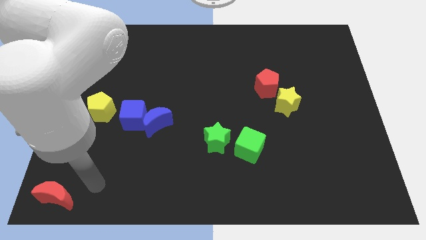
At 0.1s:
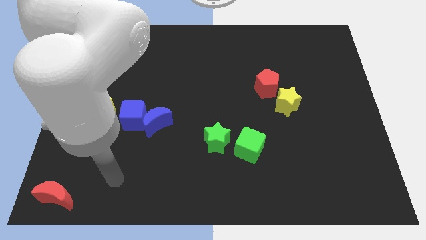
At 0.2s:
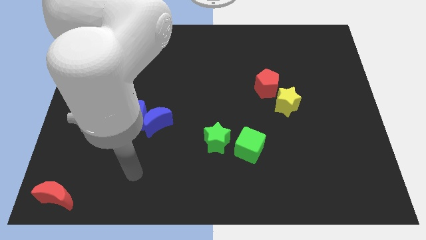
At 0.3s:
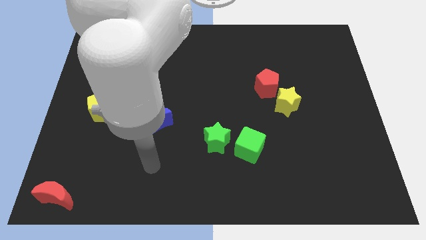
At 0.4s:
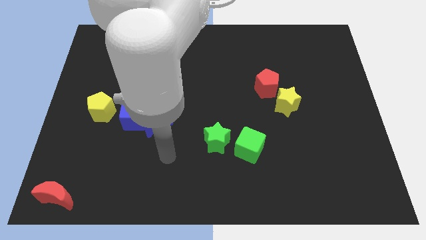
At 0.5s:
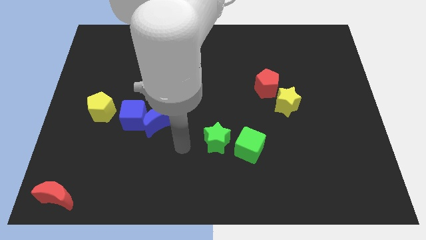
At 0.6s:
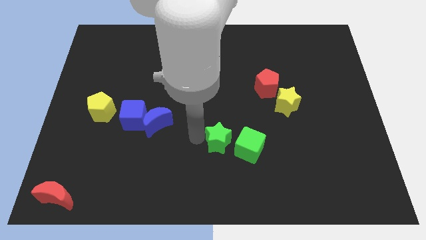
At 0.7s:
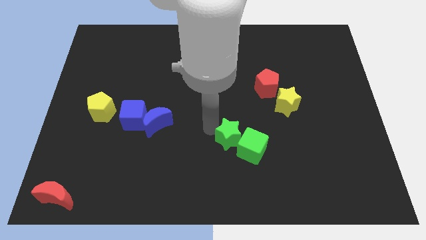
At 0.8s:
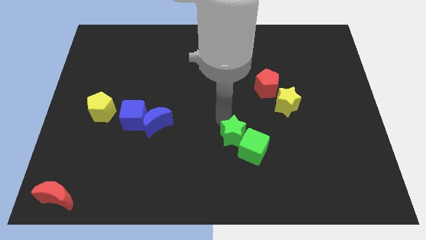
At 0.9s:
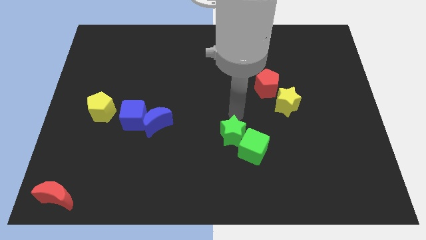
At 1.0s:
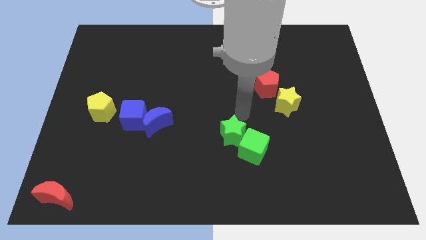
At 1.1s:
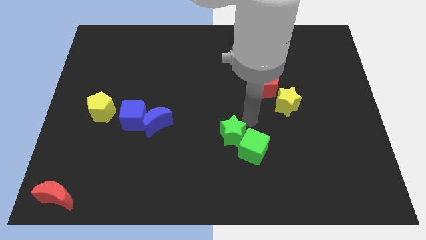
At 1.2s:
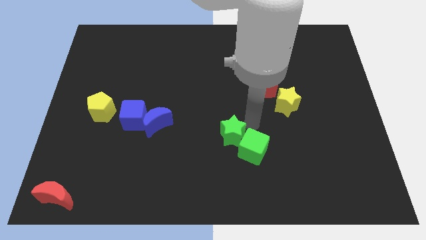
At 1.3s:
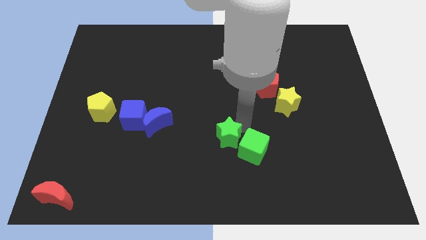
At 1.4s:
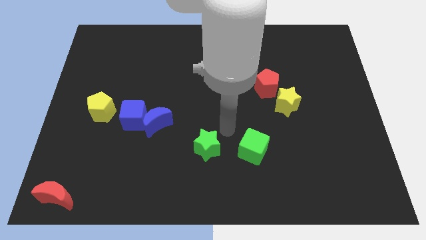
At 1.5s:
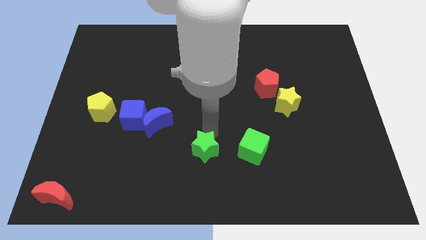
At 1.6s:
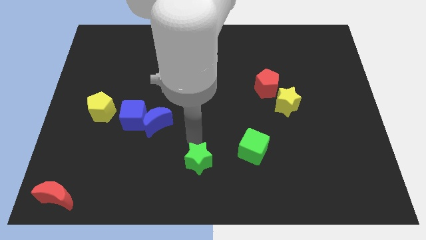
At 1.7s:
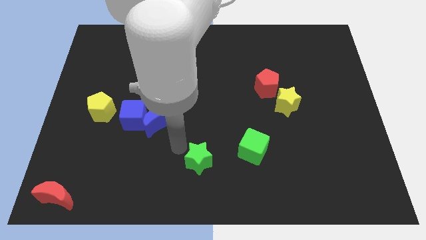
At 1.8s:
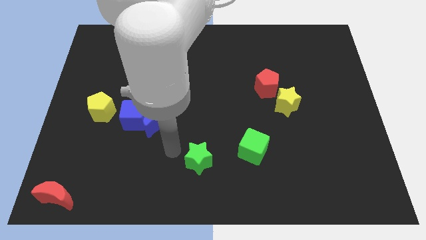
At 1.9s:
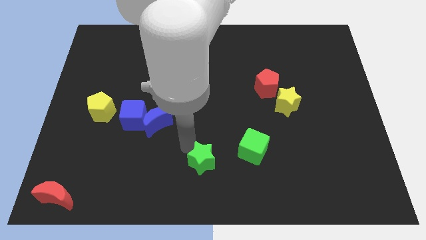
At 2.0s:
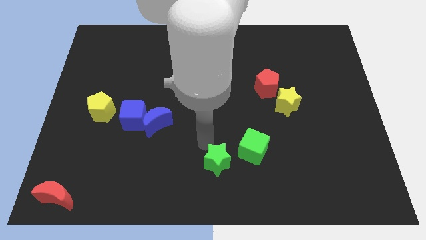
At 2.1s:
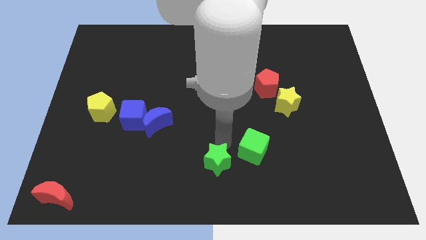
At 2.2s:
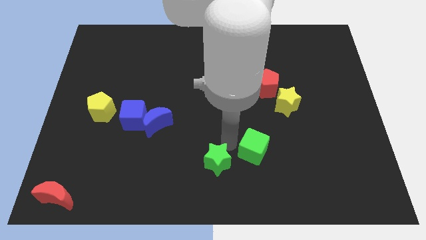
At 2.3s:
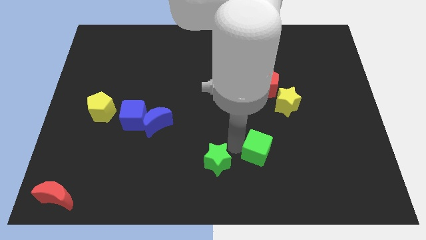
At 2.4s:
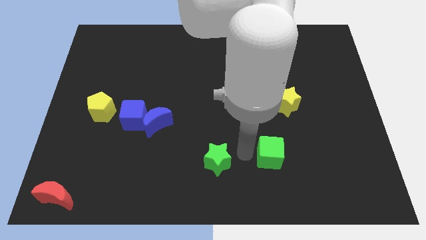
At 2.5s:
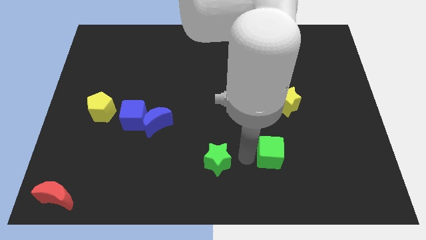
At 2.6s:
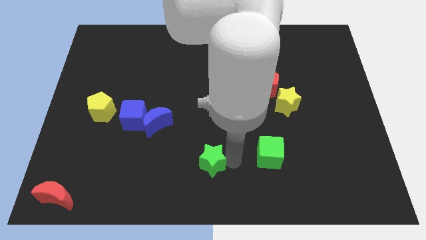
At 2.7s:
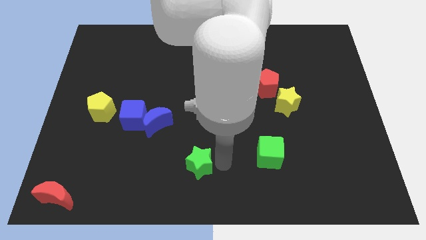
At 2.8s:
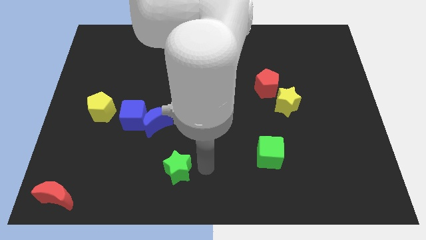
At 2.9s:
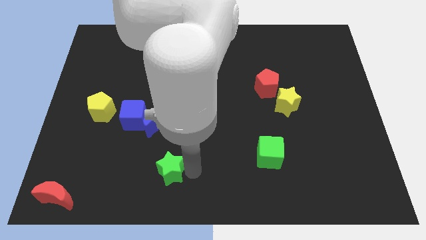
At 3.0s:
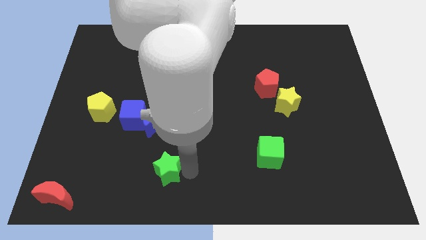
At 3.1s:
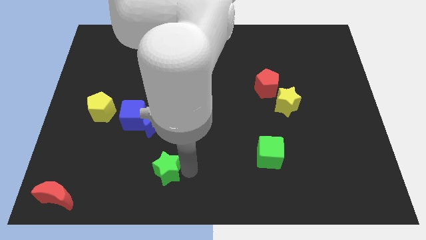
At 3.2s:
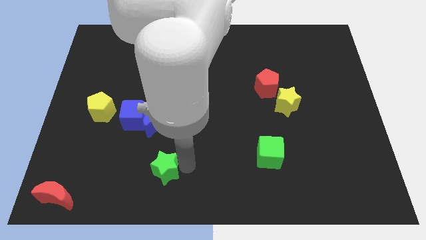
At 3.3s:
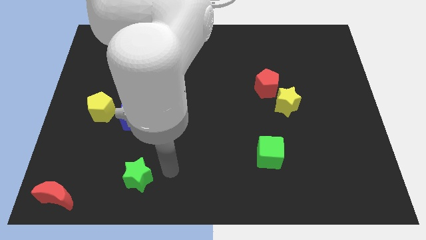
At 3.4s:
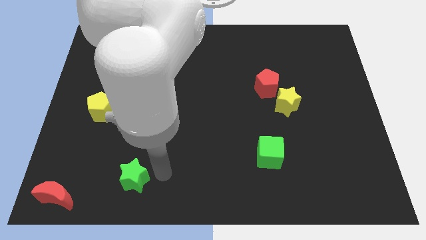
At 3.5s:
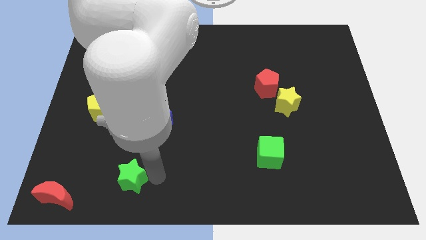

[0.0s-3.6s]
separate the green star from the green cube

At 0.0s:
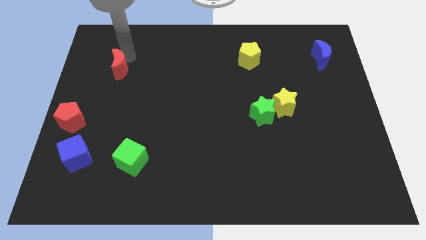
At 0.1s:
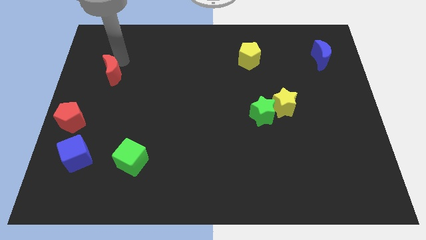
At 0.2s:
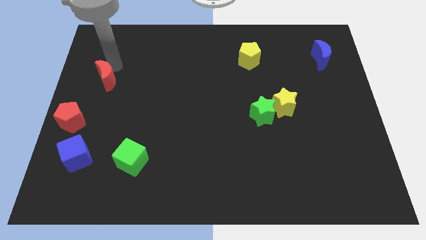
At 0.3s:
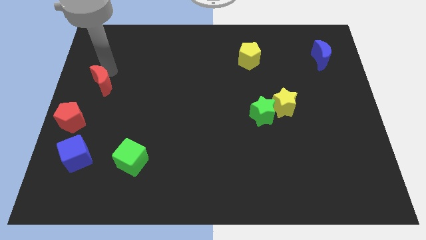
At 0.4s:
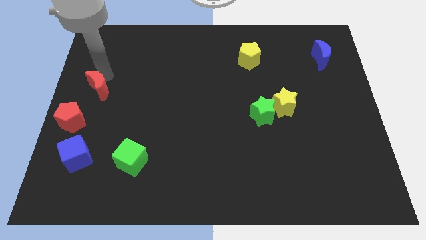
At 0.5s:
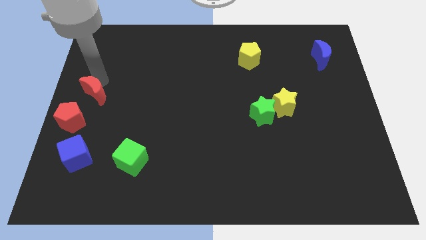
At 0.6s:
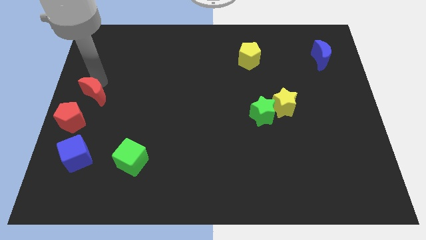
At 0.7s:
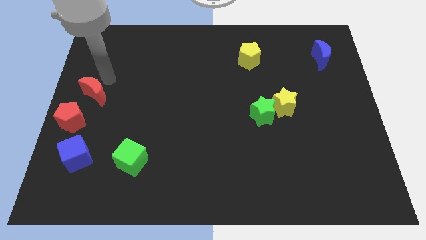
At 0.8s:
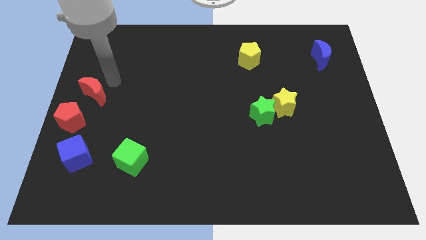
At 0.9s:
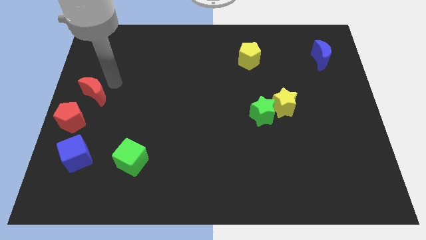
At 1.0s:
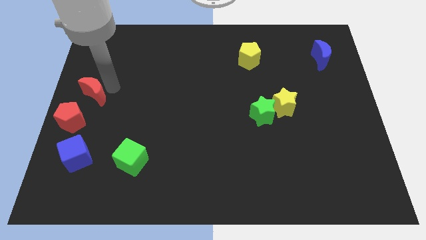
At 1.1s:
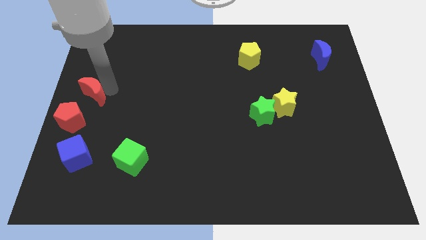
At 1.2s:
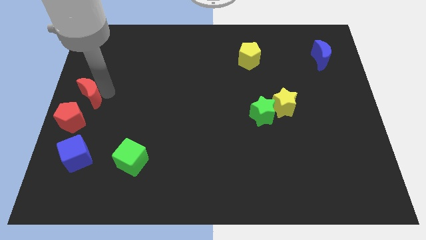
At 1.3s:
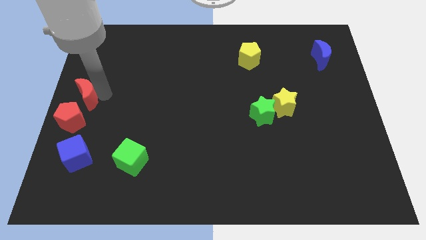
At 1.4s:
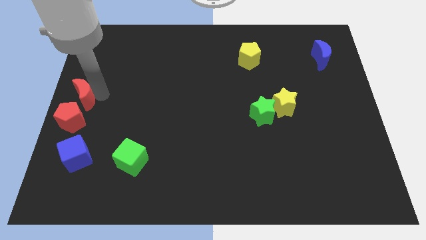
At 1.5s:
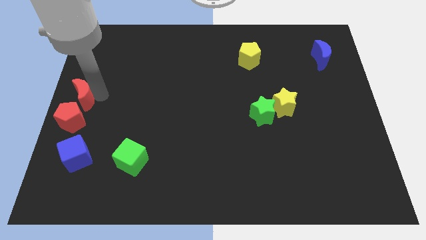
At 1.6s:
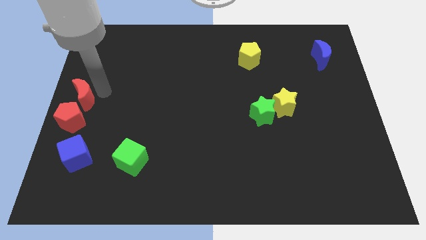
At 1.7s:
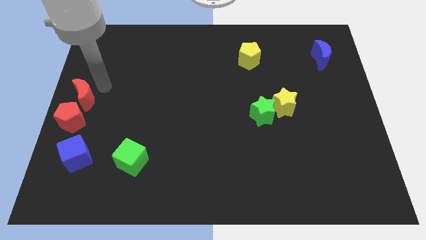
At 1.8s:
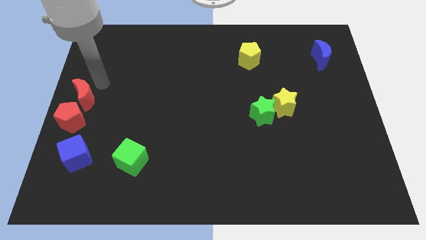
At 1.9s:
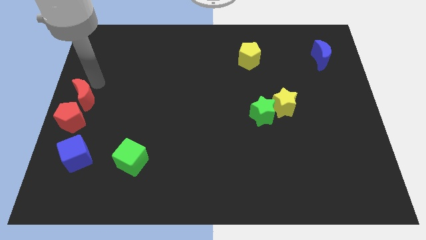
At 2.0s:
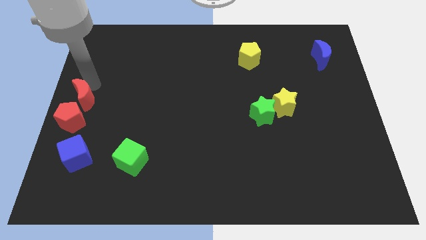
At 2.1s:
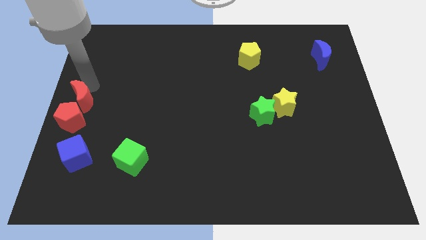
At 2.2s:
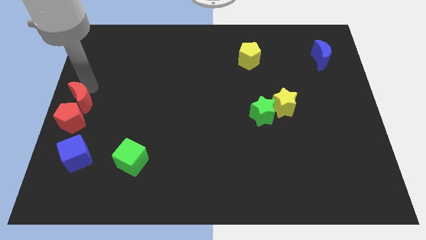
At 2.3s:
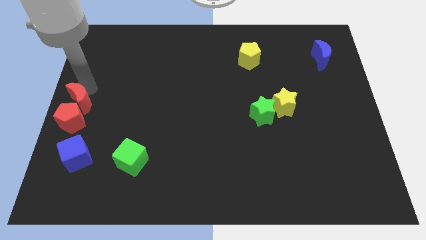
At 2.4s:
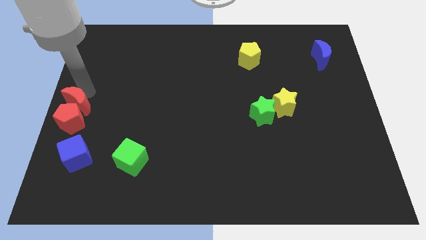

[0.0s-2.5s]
move the red moon into the red pentagon

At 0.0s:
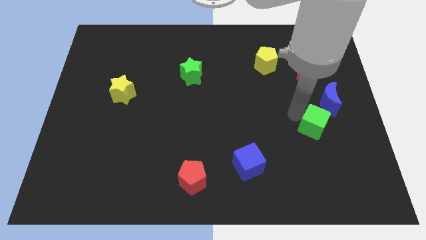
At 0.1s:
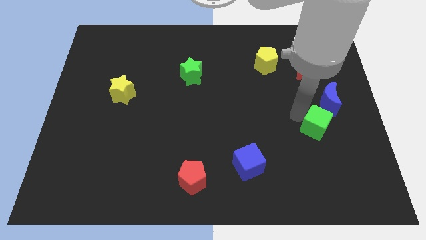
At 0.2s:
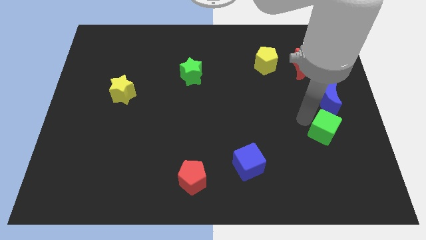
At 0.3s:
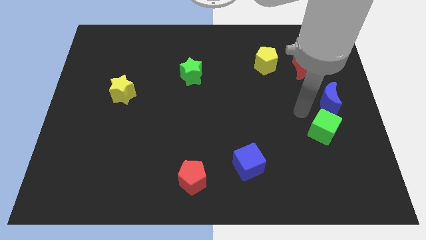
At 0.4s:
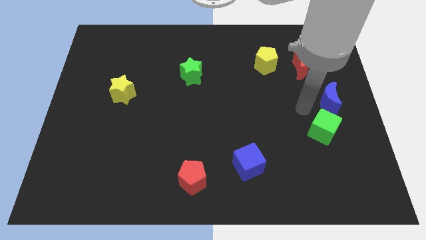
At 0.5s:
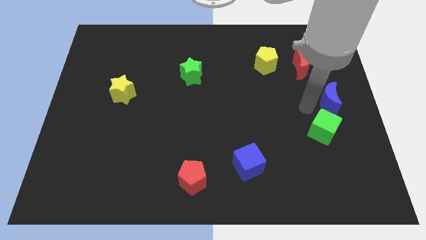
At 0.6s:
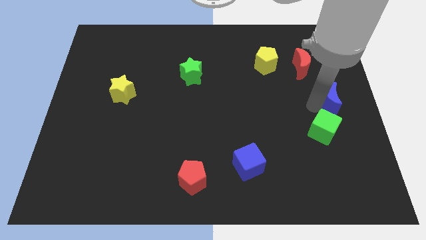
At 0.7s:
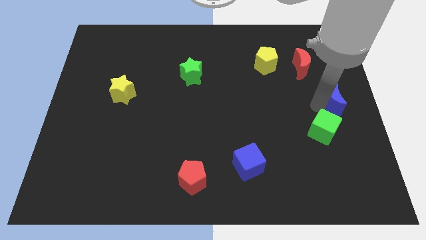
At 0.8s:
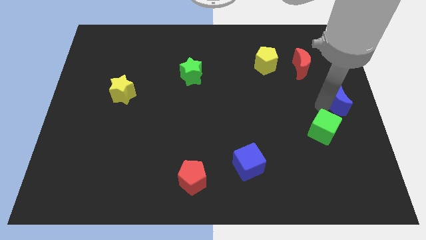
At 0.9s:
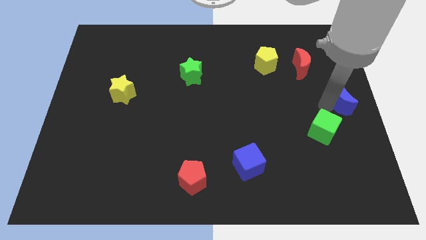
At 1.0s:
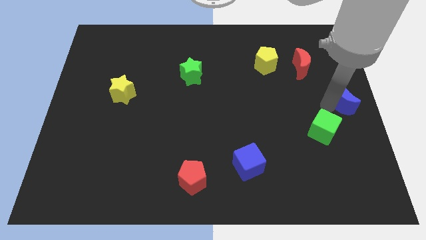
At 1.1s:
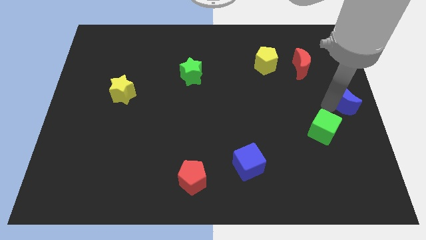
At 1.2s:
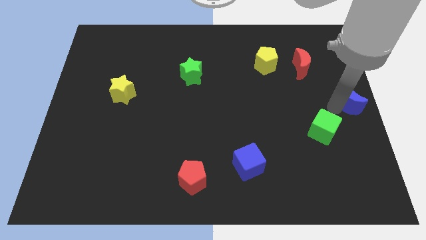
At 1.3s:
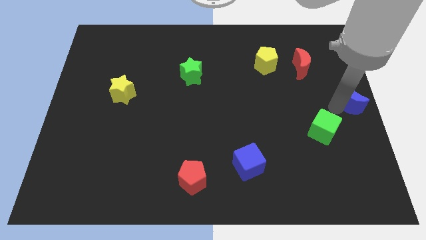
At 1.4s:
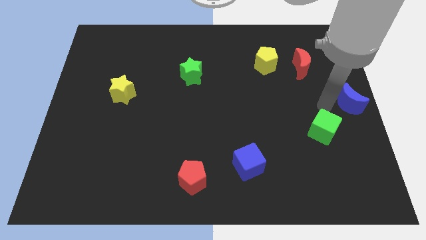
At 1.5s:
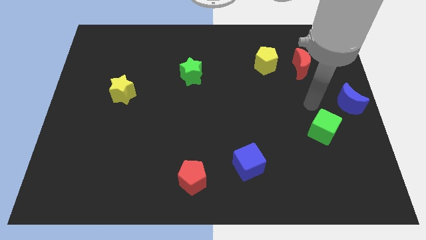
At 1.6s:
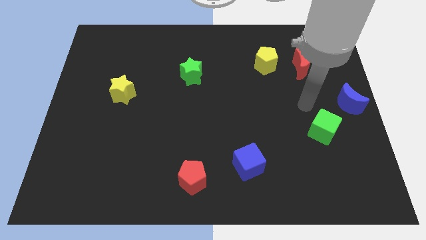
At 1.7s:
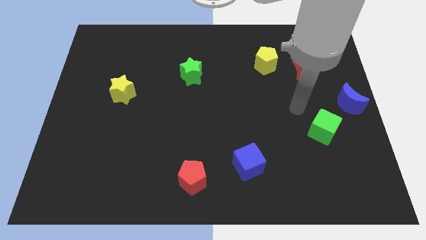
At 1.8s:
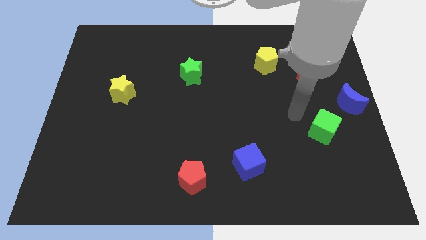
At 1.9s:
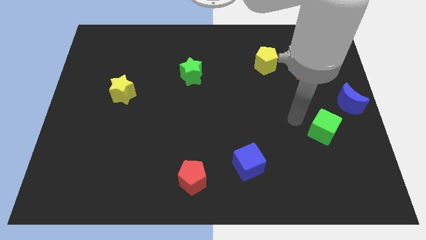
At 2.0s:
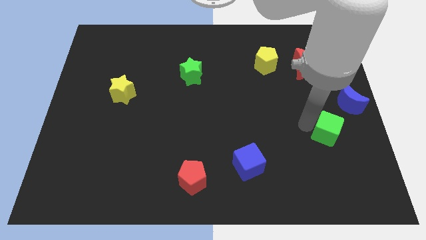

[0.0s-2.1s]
separate green cube and blue moon

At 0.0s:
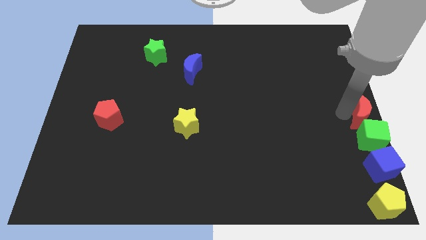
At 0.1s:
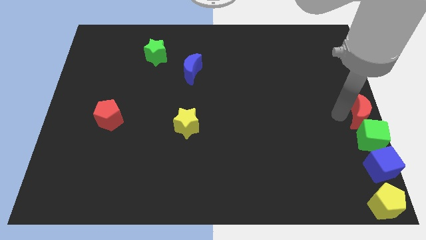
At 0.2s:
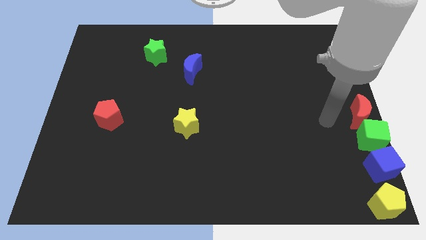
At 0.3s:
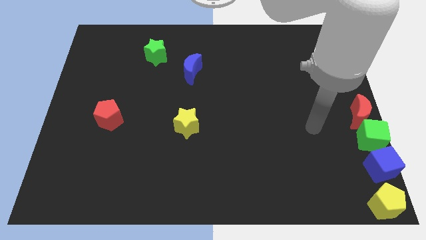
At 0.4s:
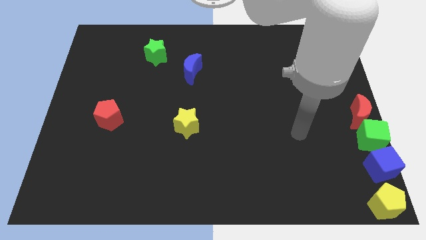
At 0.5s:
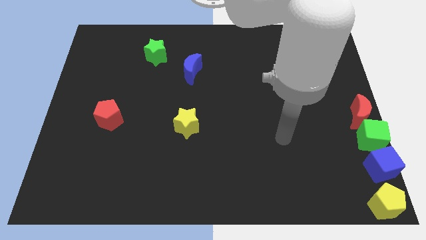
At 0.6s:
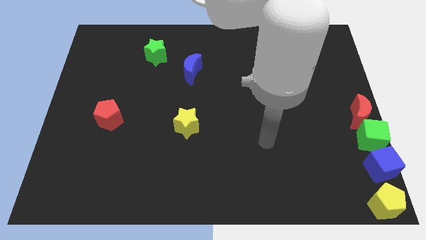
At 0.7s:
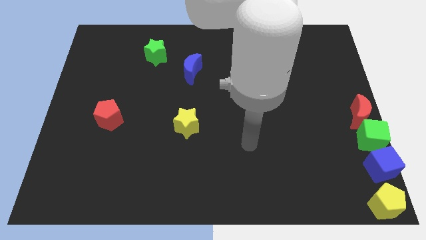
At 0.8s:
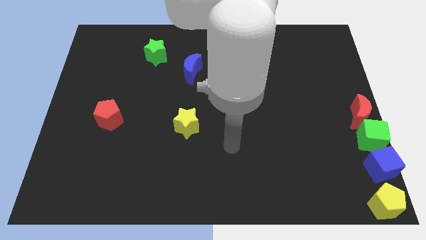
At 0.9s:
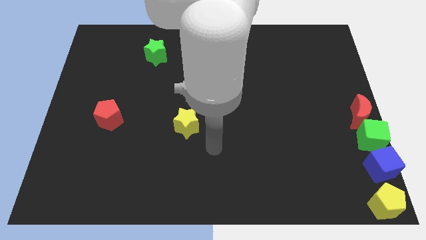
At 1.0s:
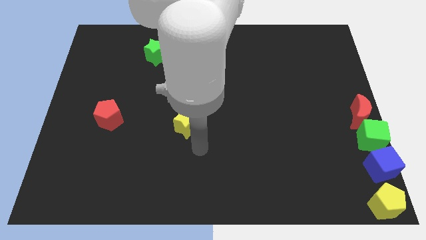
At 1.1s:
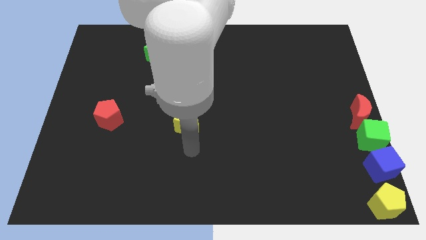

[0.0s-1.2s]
move your arm away from the red moon
